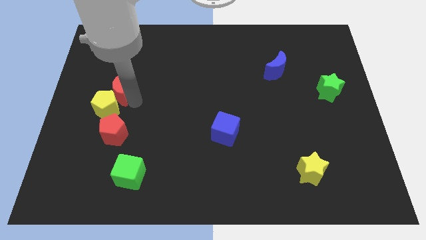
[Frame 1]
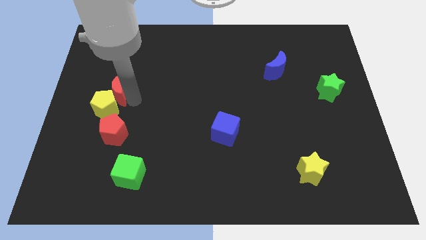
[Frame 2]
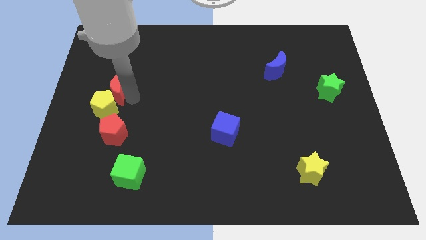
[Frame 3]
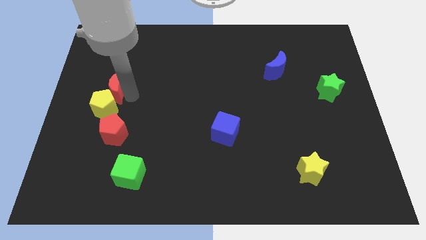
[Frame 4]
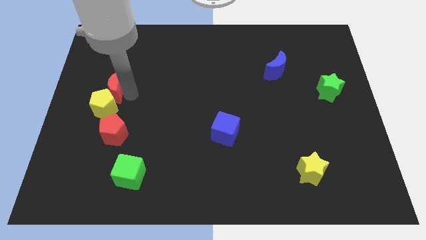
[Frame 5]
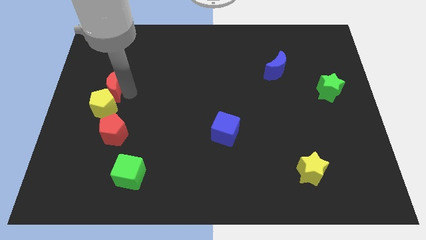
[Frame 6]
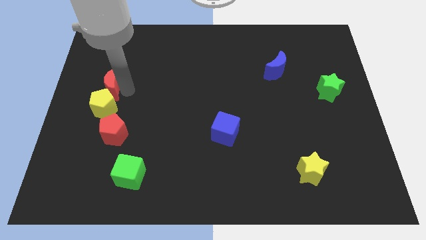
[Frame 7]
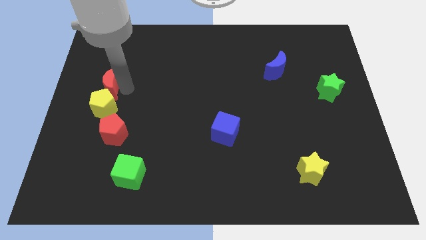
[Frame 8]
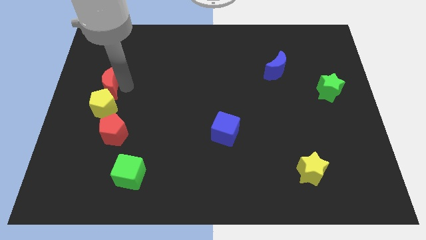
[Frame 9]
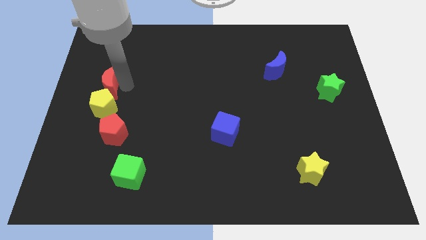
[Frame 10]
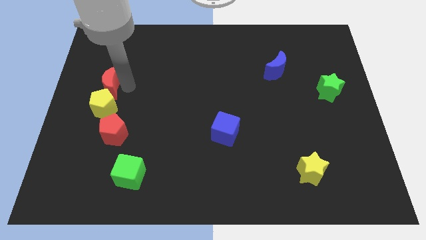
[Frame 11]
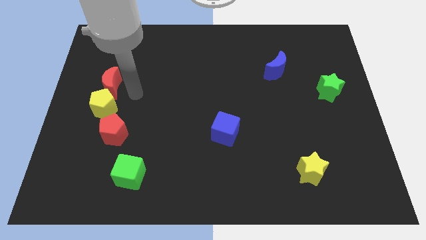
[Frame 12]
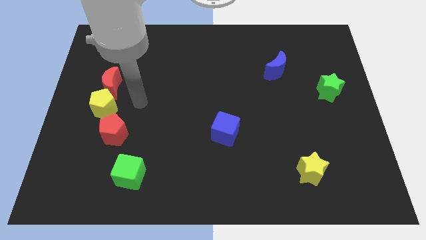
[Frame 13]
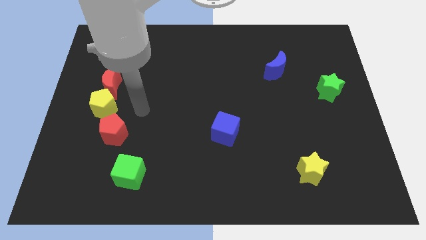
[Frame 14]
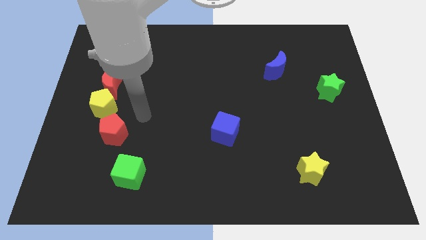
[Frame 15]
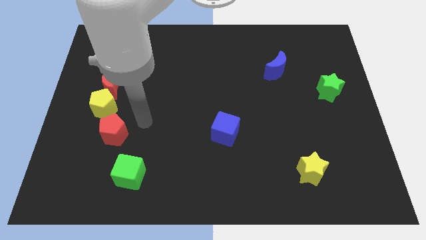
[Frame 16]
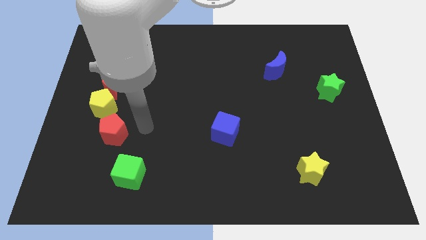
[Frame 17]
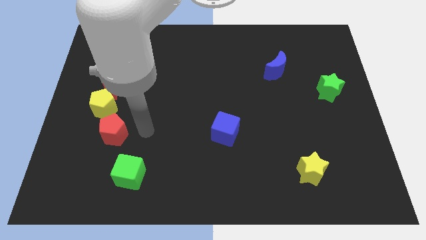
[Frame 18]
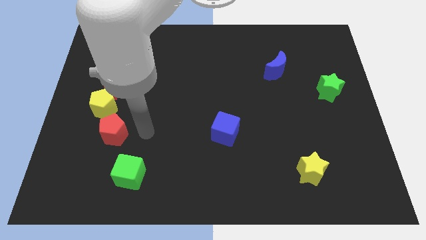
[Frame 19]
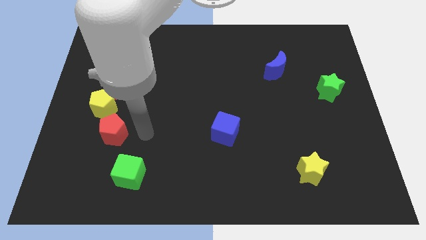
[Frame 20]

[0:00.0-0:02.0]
move the red moon above the yellow pentagon

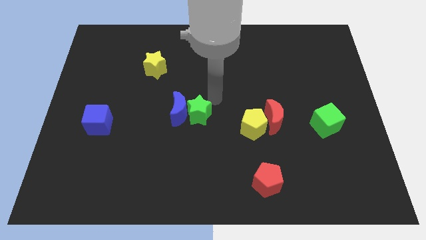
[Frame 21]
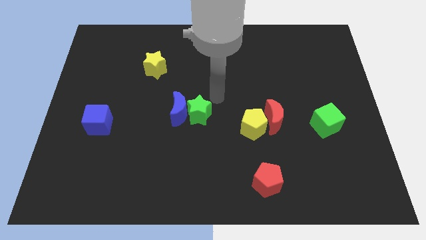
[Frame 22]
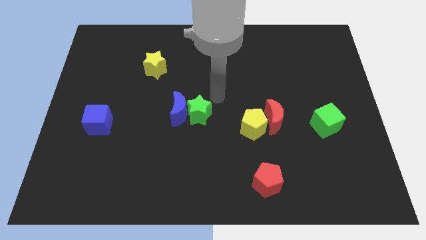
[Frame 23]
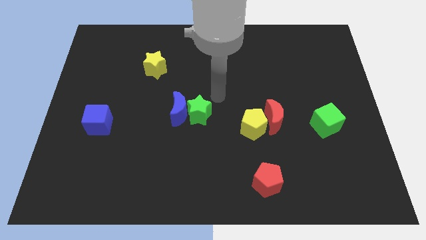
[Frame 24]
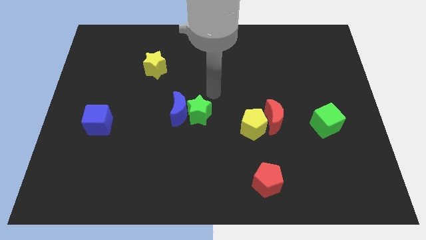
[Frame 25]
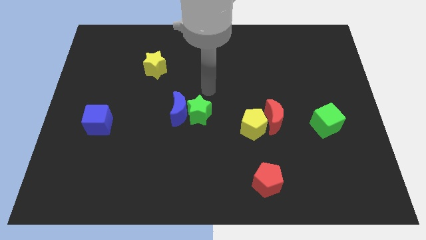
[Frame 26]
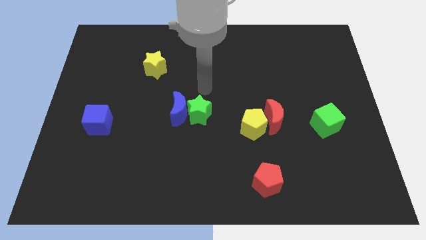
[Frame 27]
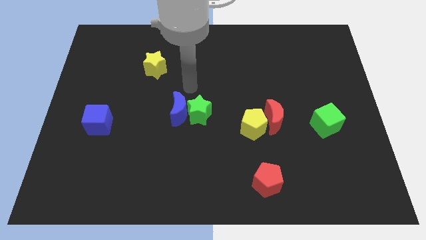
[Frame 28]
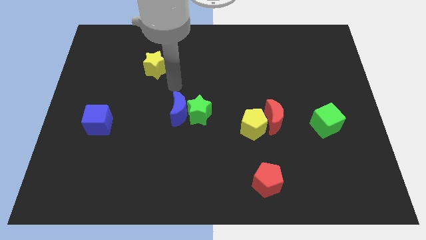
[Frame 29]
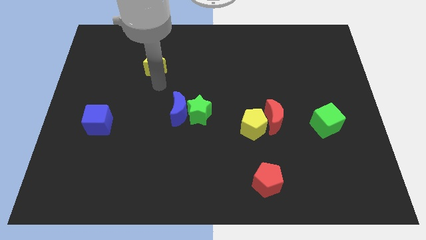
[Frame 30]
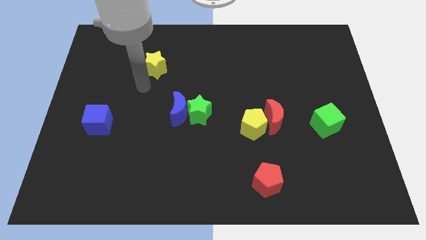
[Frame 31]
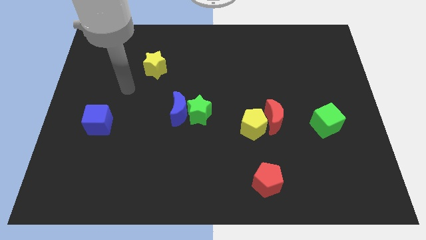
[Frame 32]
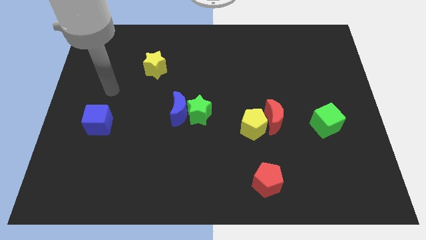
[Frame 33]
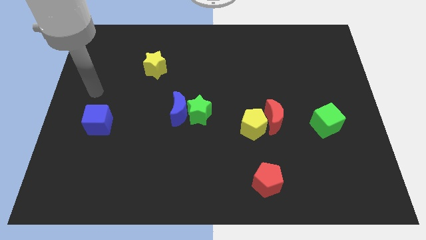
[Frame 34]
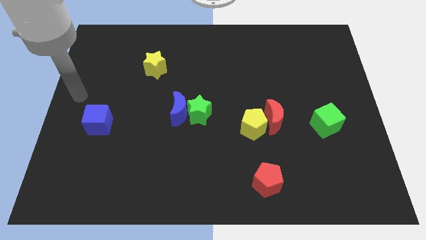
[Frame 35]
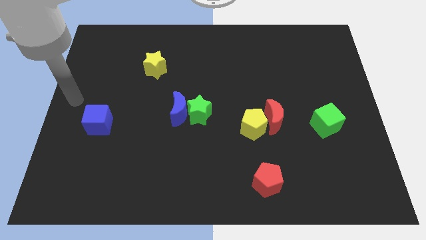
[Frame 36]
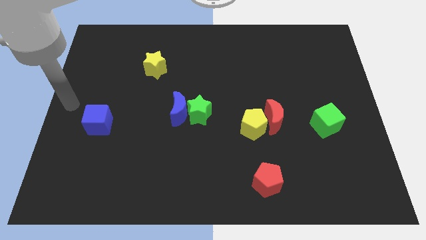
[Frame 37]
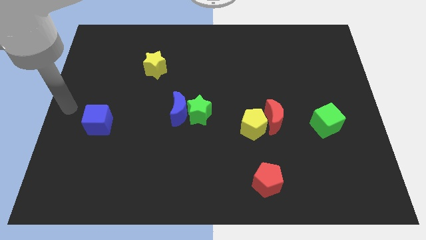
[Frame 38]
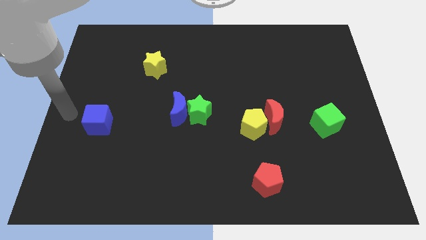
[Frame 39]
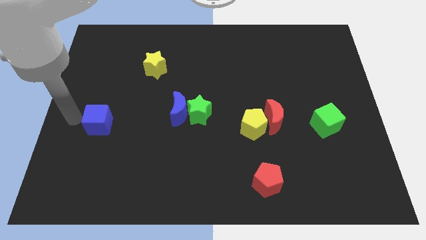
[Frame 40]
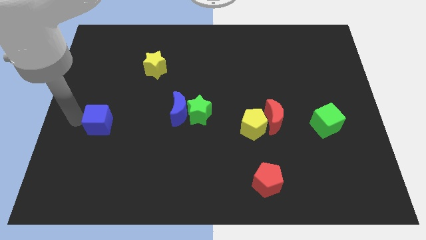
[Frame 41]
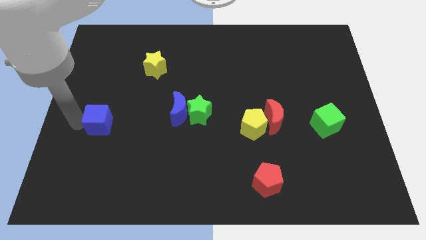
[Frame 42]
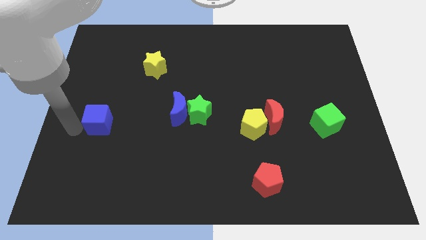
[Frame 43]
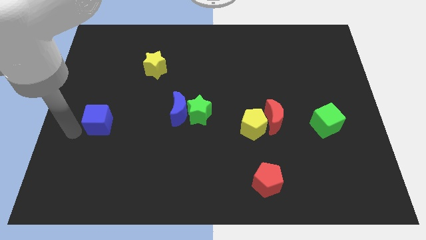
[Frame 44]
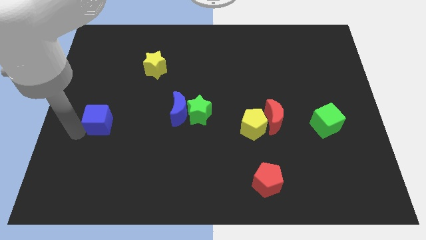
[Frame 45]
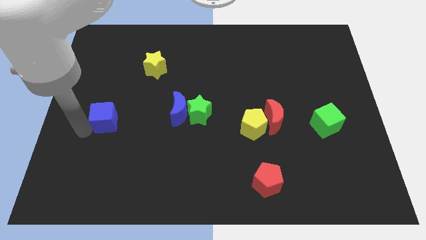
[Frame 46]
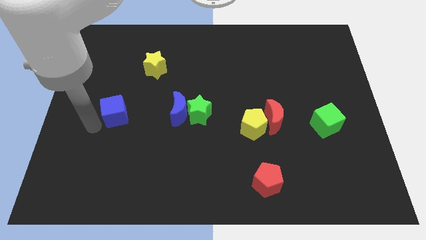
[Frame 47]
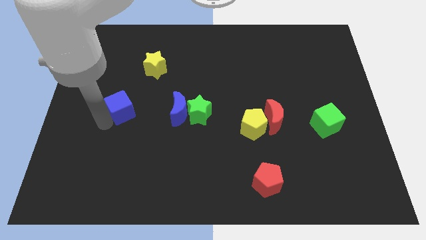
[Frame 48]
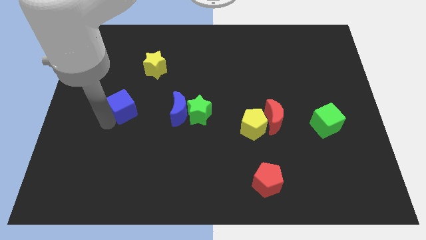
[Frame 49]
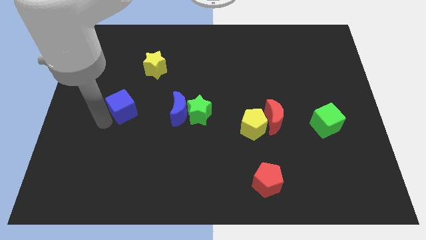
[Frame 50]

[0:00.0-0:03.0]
place the blue cube parallel to the blue crescent

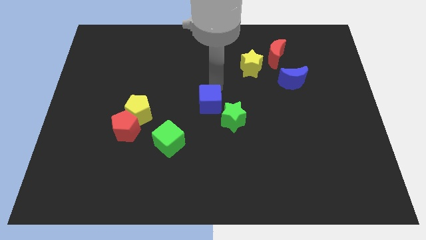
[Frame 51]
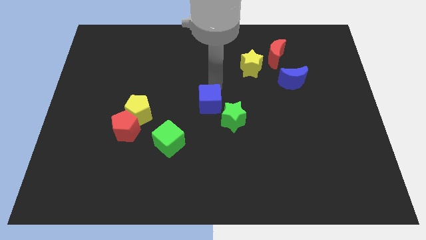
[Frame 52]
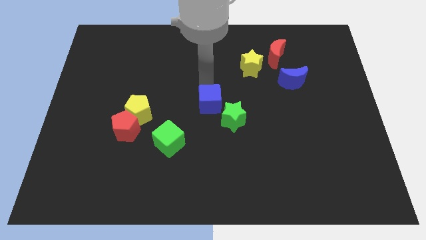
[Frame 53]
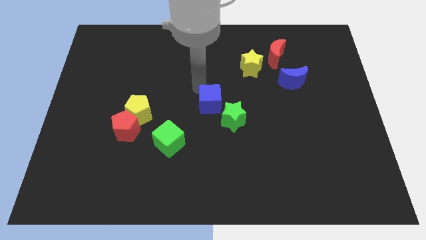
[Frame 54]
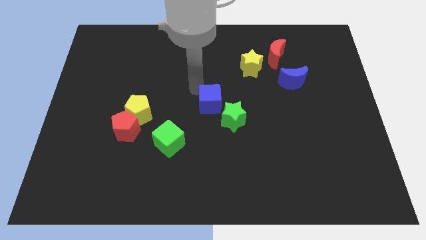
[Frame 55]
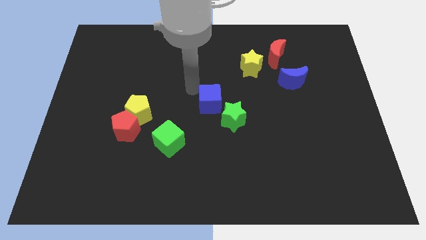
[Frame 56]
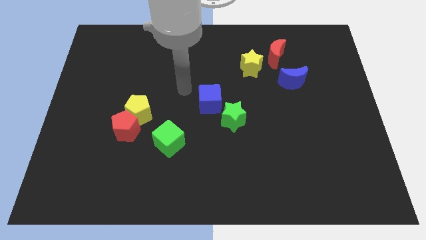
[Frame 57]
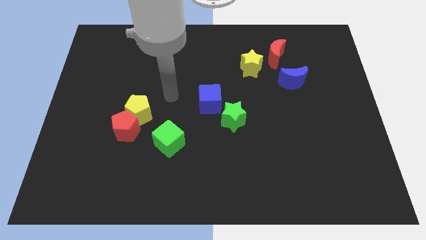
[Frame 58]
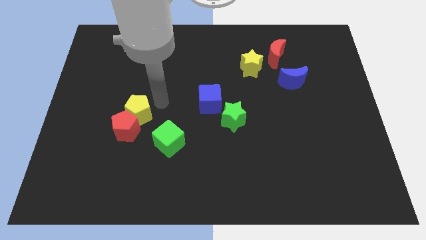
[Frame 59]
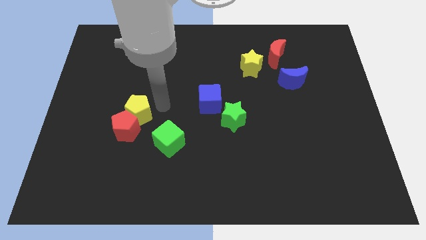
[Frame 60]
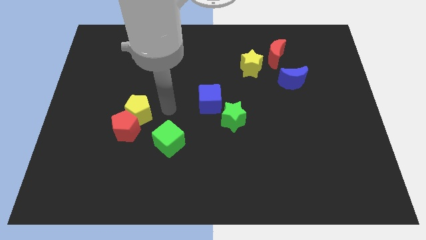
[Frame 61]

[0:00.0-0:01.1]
move your arm away from blue cube

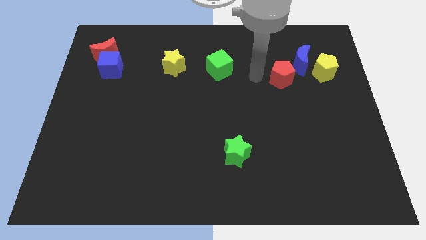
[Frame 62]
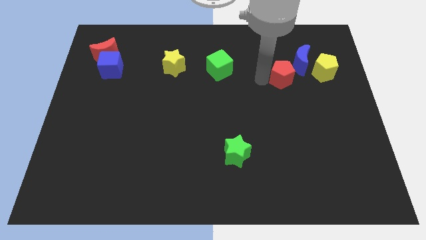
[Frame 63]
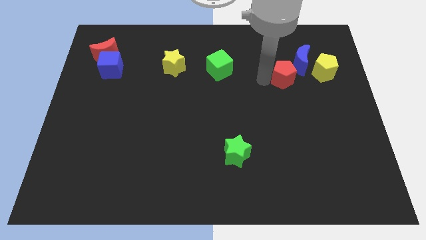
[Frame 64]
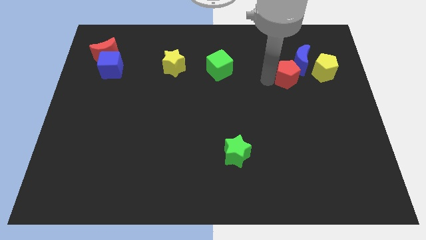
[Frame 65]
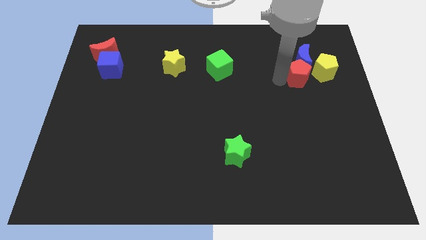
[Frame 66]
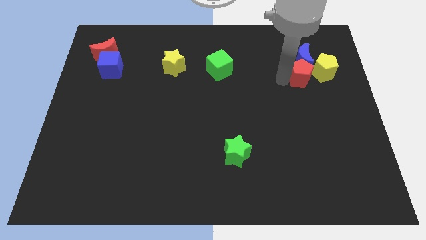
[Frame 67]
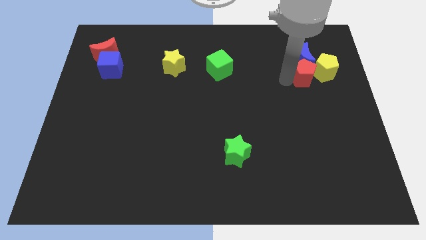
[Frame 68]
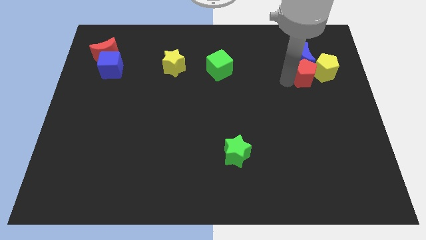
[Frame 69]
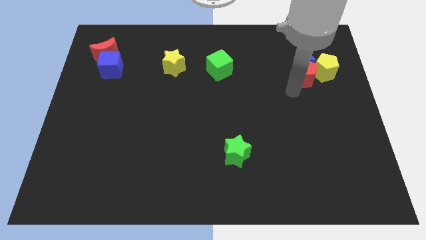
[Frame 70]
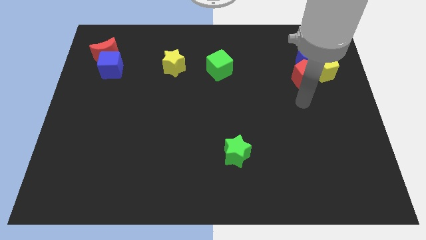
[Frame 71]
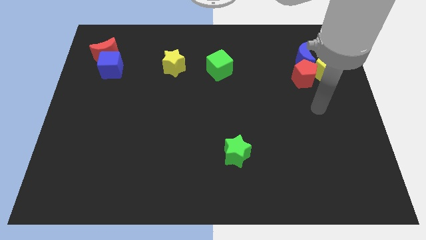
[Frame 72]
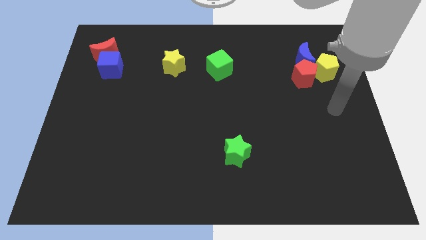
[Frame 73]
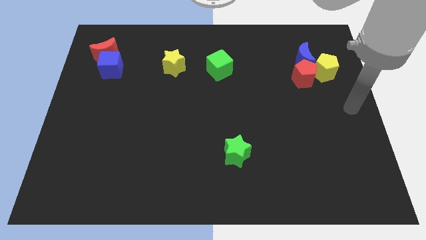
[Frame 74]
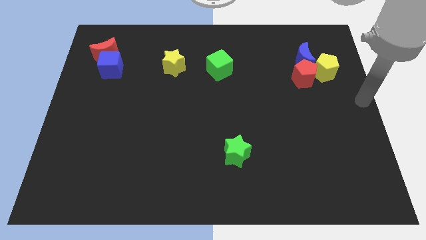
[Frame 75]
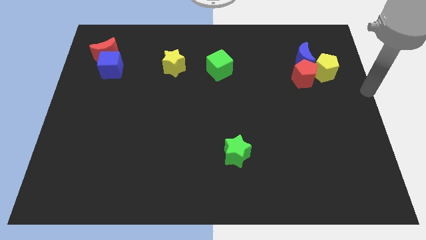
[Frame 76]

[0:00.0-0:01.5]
place the red pentagon below the blue crescent

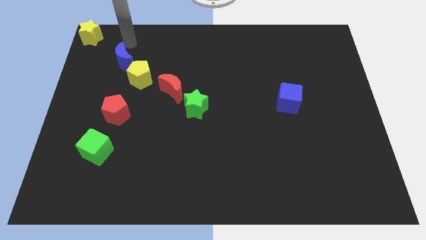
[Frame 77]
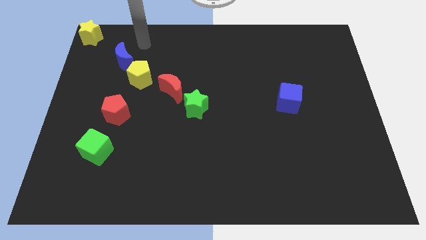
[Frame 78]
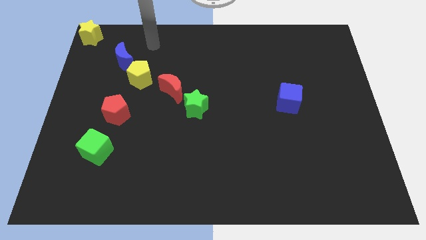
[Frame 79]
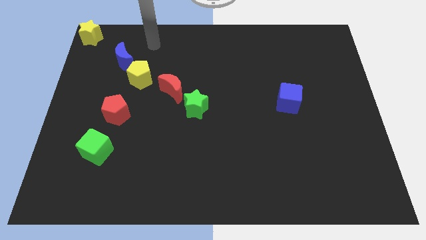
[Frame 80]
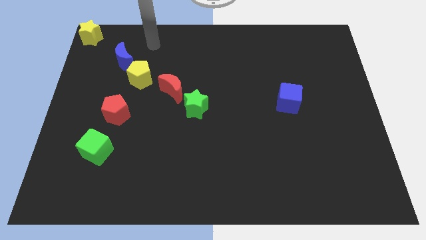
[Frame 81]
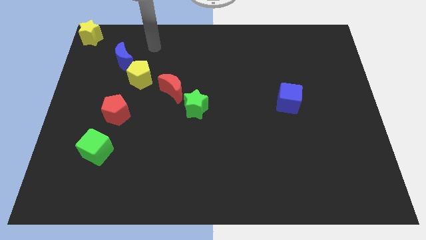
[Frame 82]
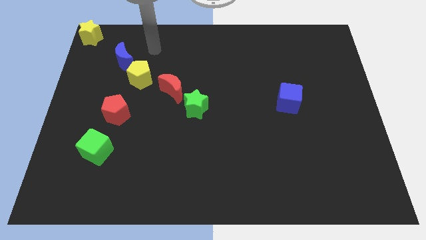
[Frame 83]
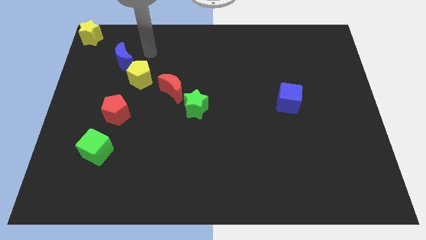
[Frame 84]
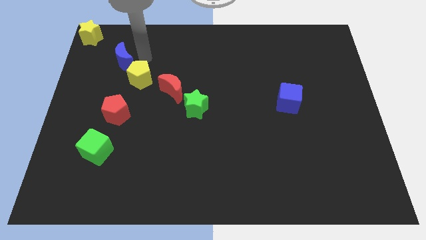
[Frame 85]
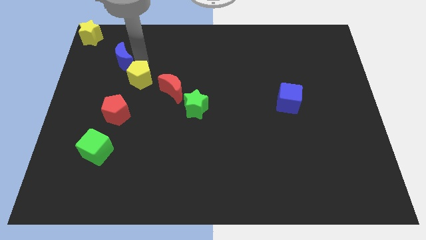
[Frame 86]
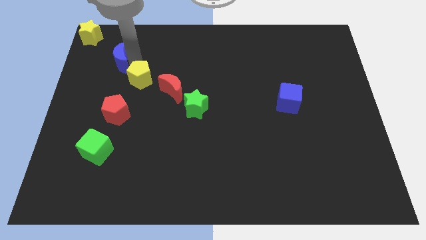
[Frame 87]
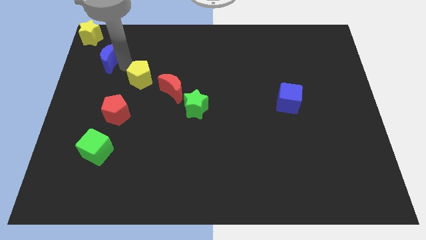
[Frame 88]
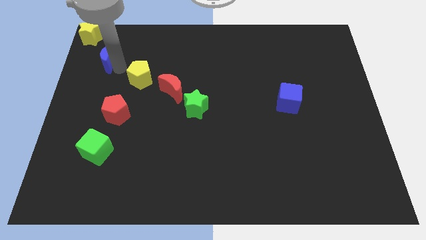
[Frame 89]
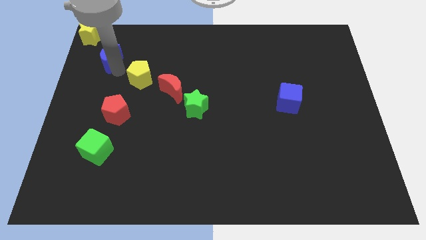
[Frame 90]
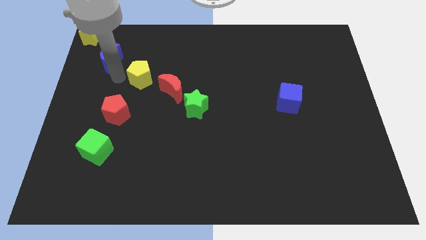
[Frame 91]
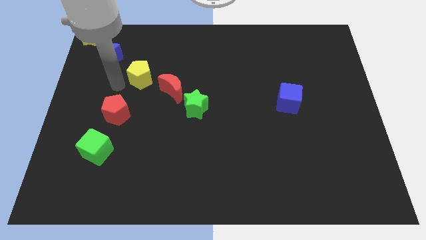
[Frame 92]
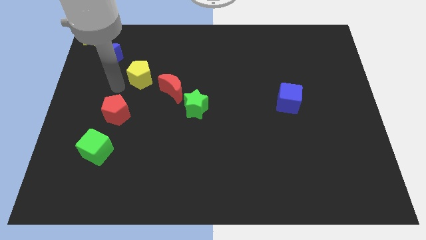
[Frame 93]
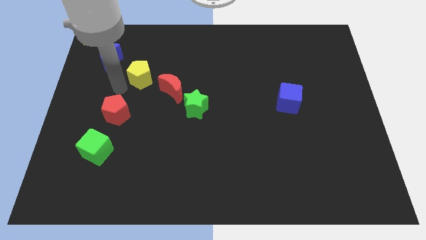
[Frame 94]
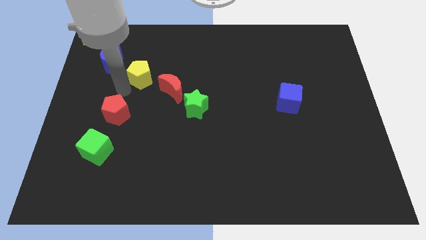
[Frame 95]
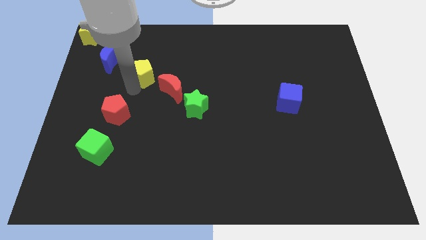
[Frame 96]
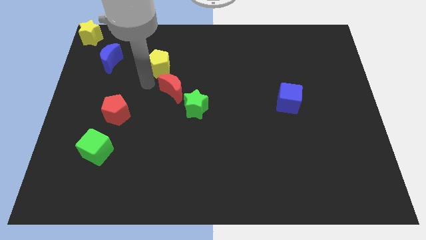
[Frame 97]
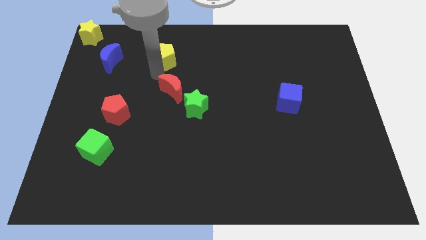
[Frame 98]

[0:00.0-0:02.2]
separate the yellow pentagon from the red moon
